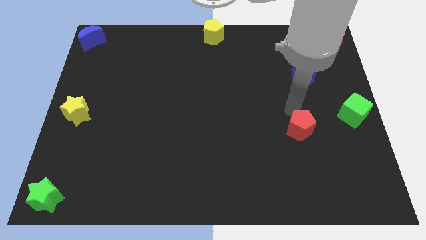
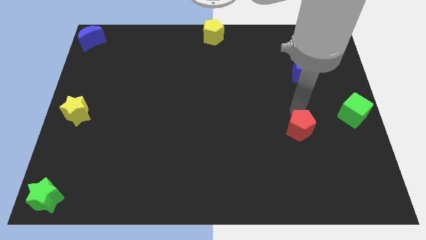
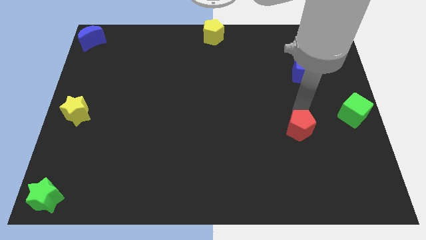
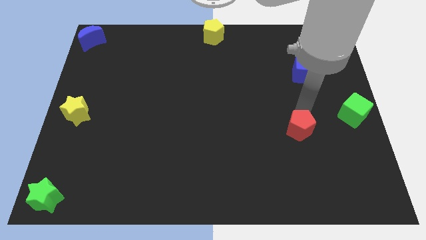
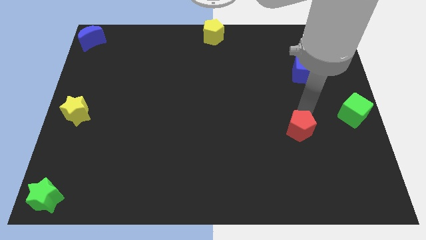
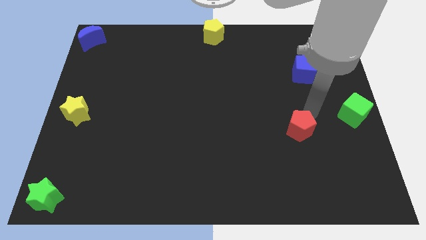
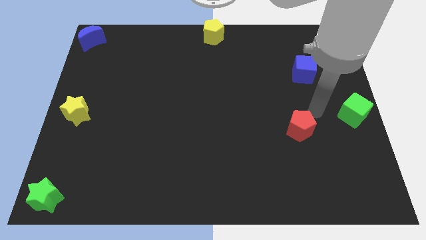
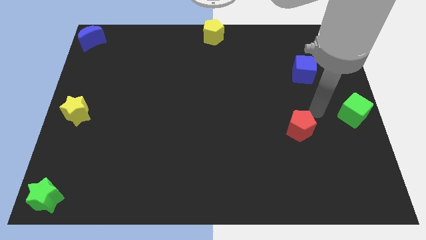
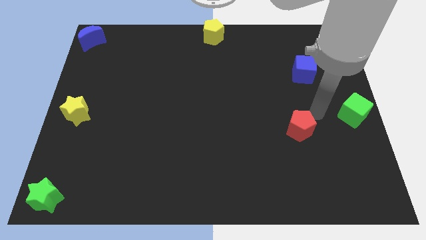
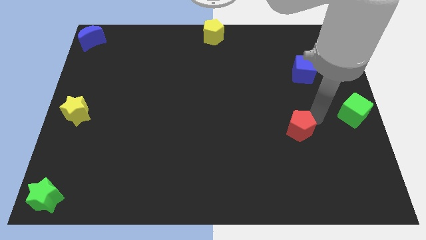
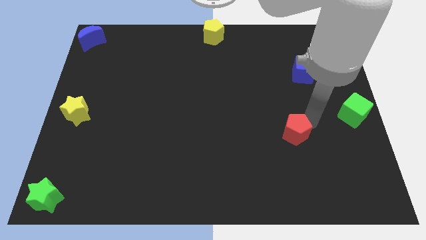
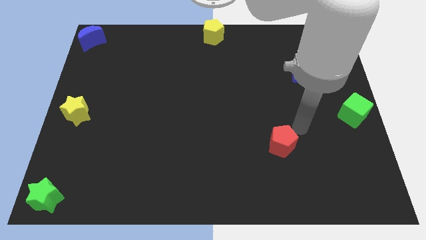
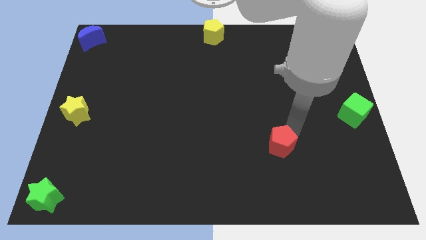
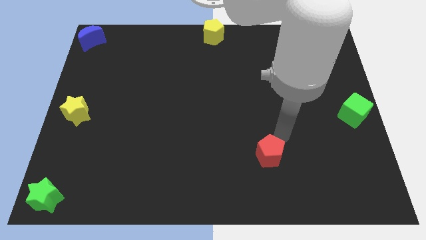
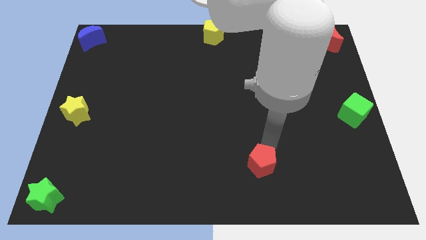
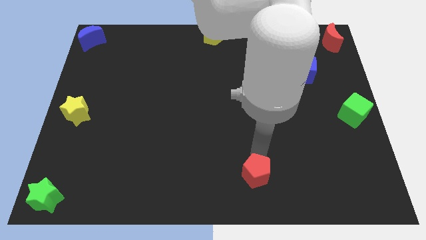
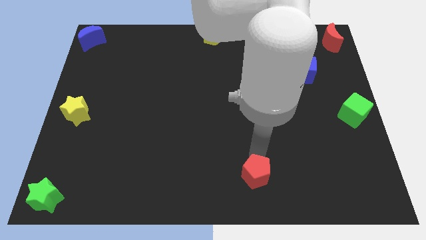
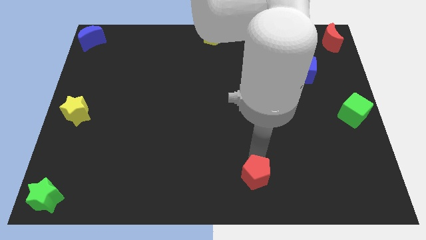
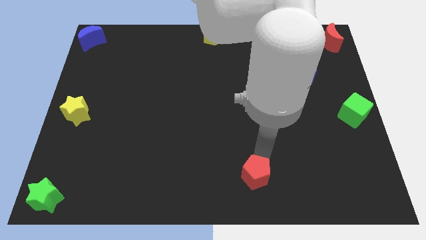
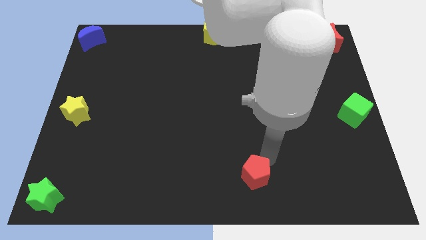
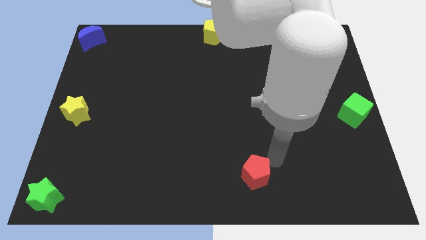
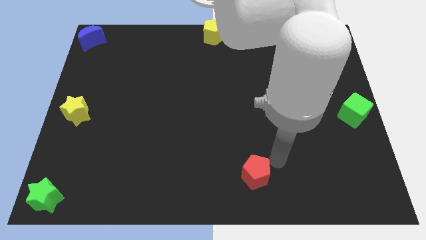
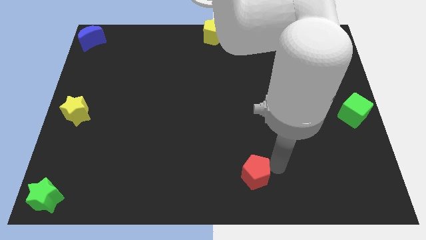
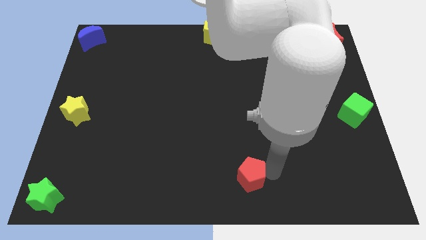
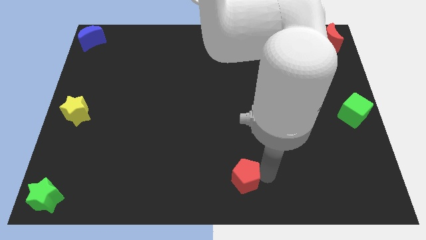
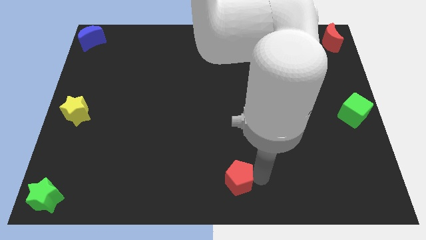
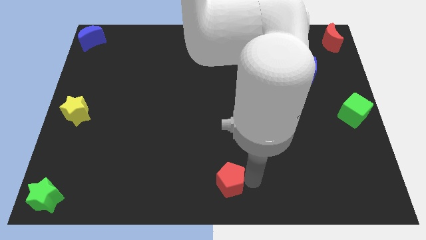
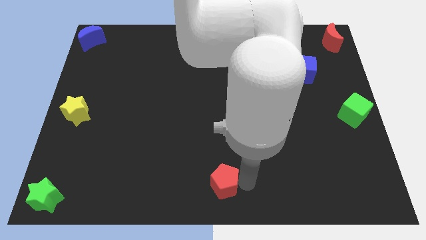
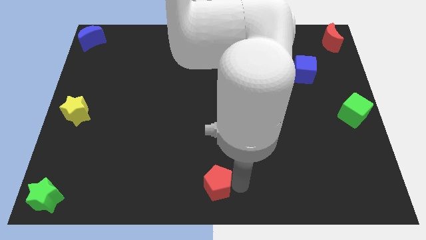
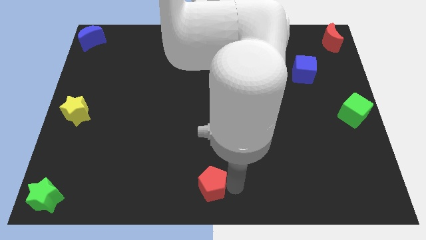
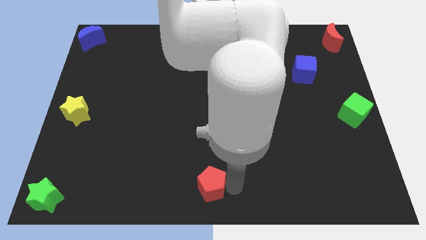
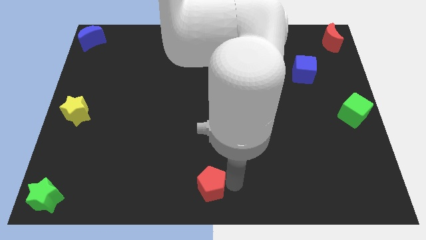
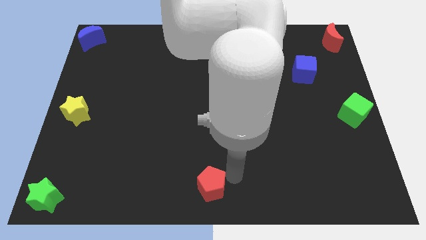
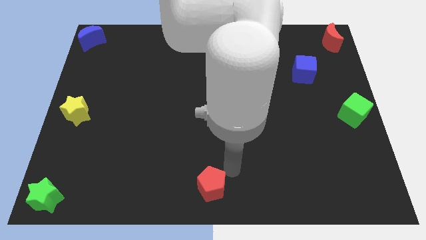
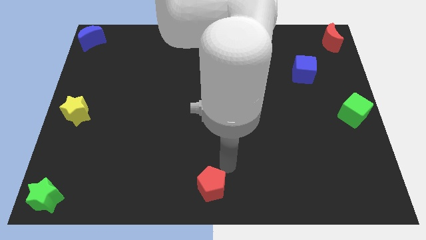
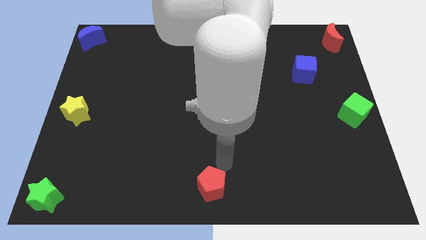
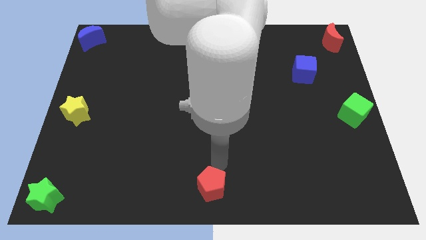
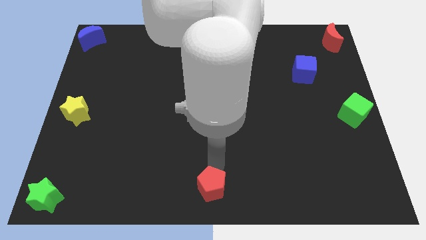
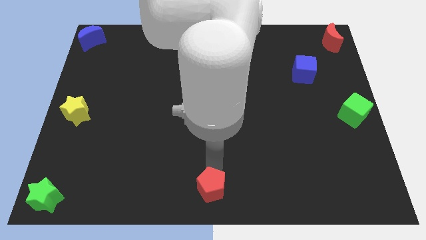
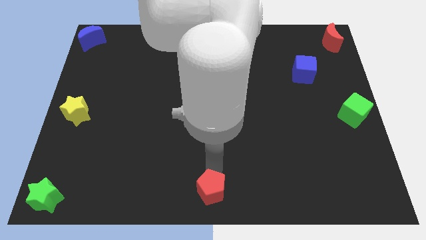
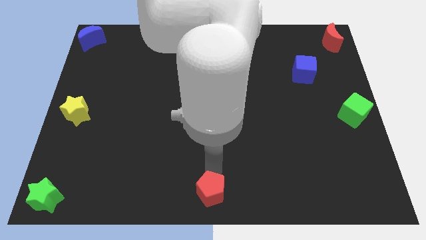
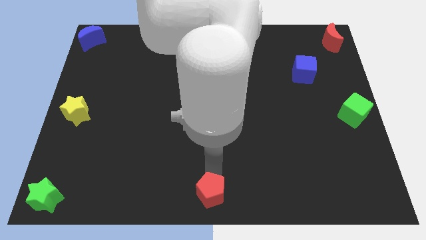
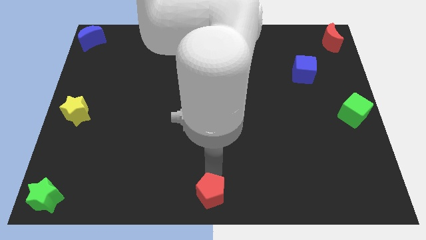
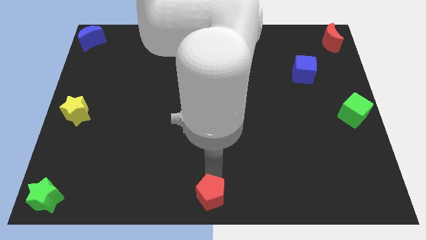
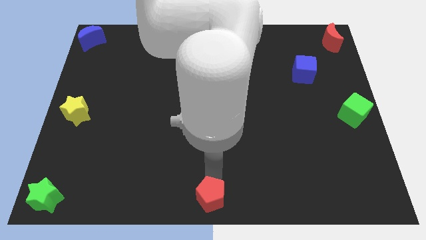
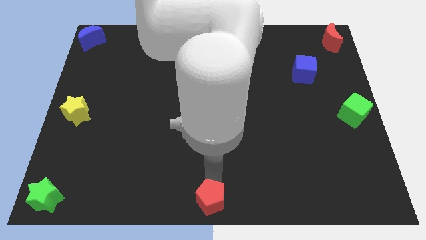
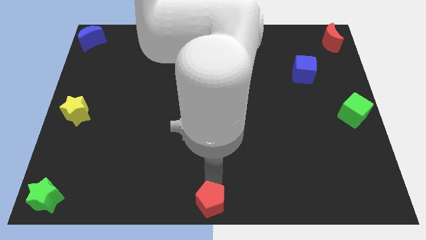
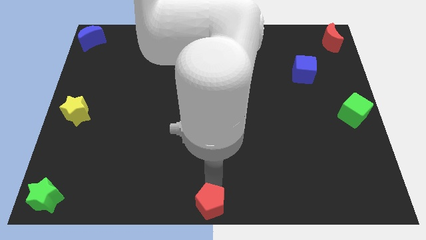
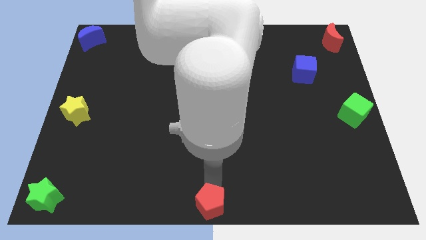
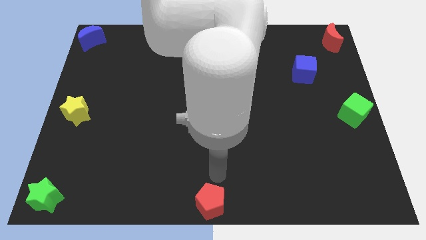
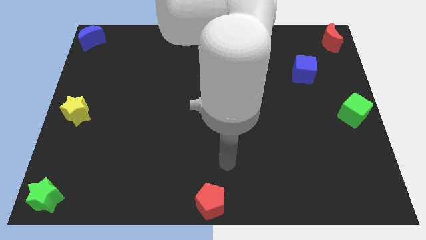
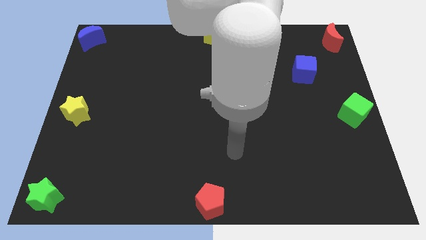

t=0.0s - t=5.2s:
place the red pentagon towards the bottom middle below the yellow pentagon

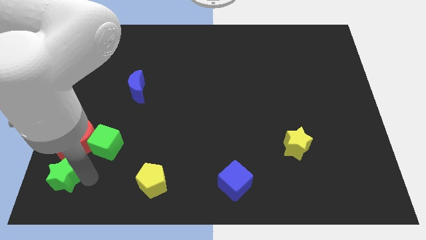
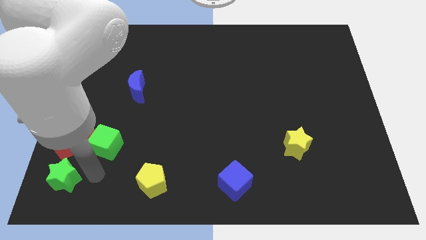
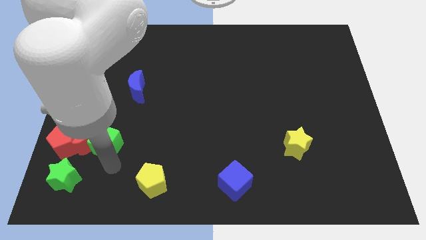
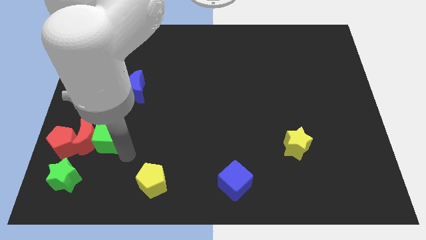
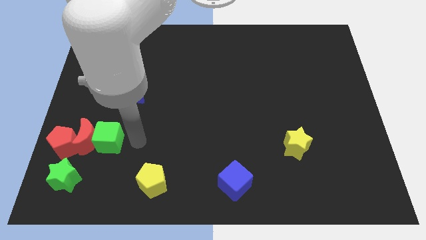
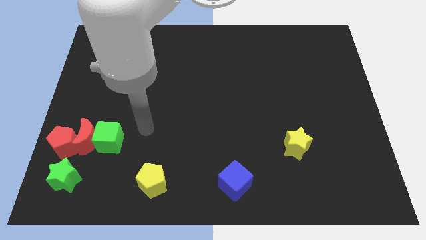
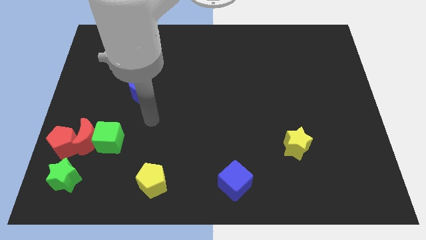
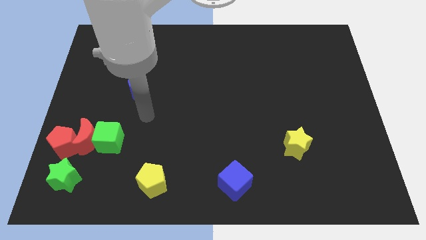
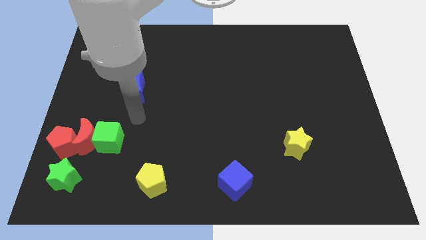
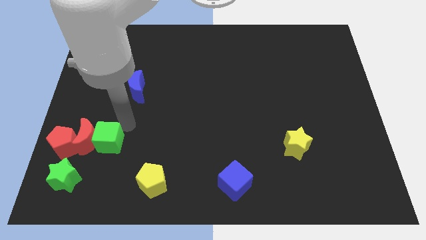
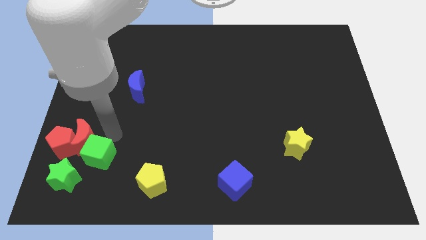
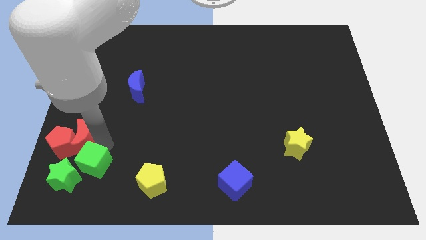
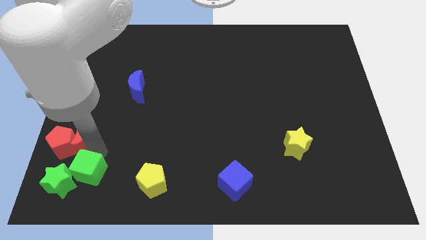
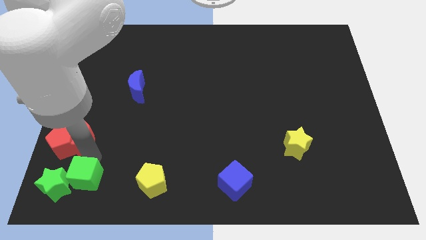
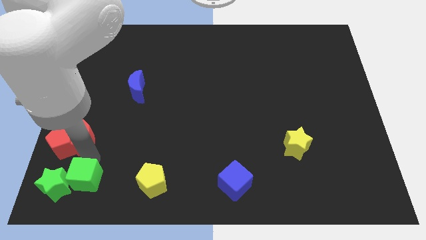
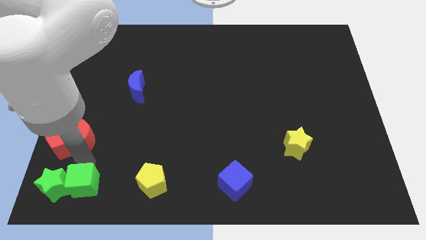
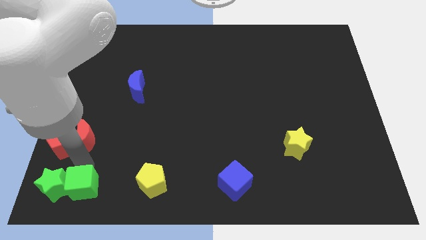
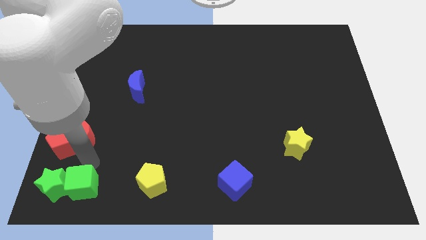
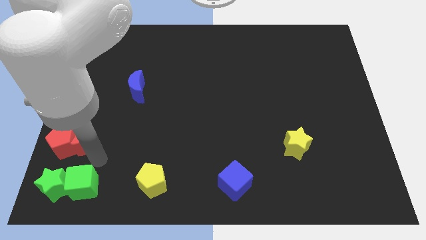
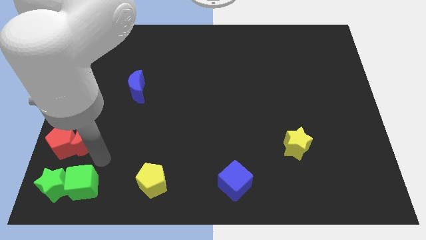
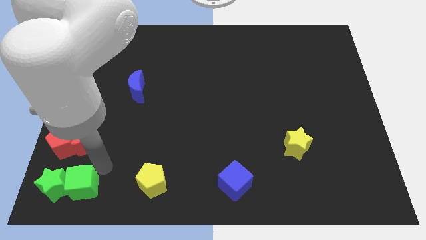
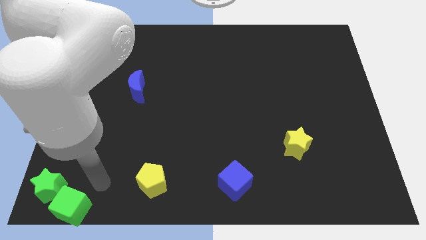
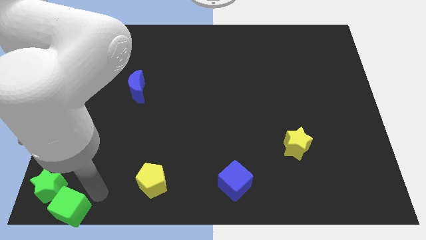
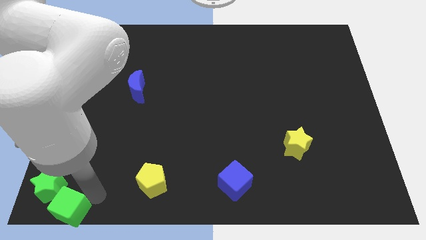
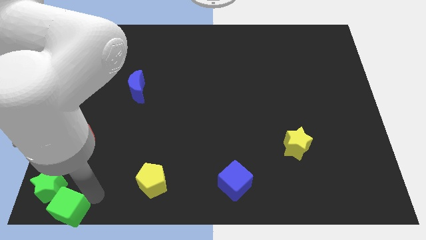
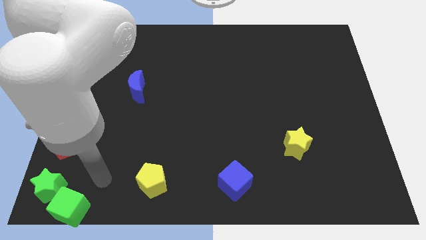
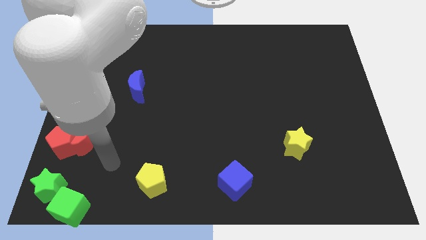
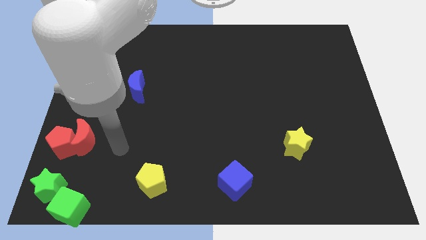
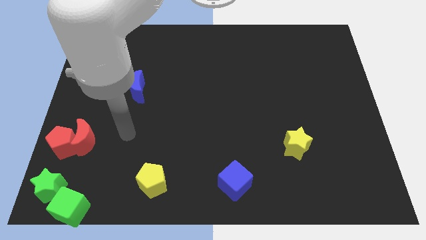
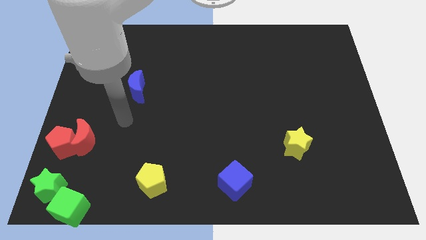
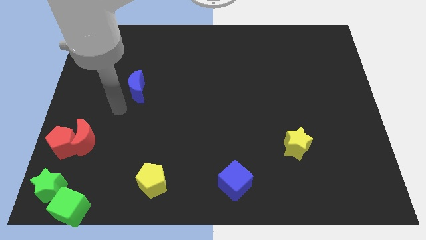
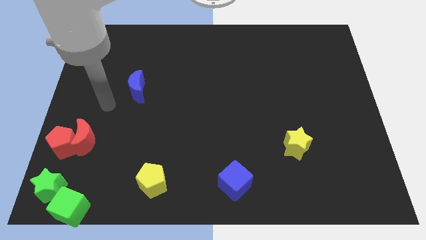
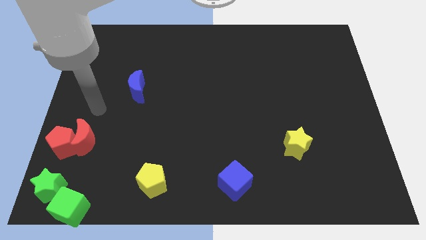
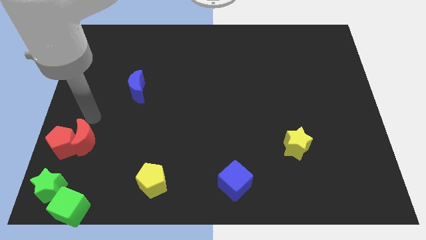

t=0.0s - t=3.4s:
place green cube to the bottom of the board

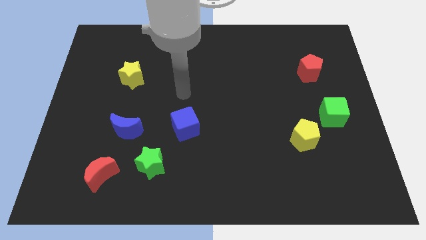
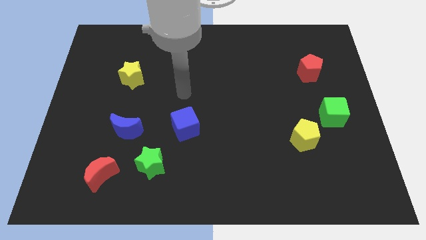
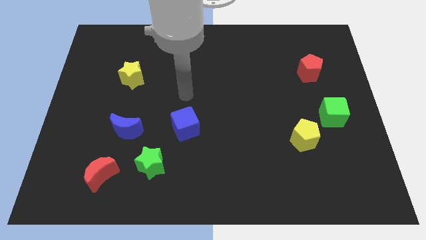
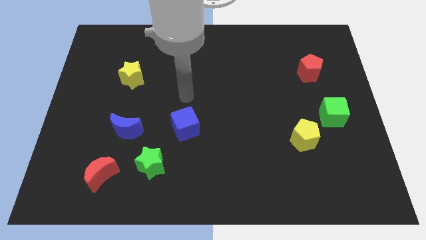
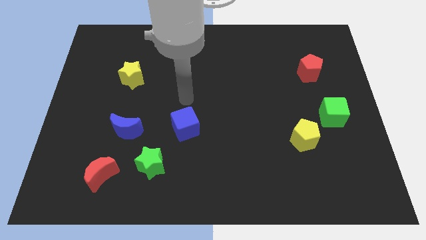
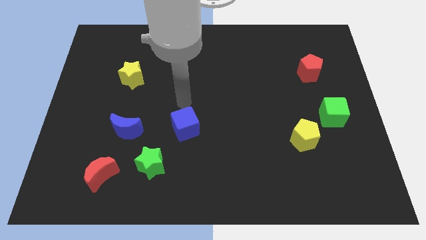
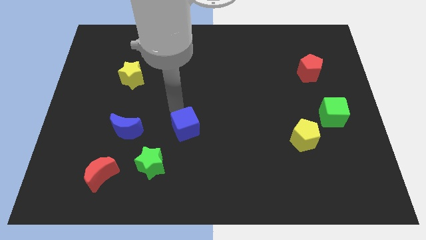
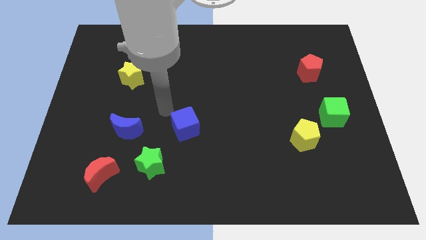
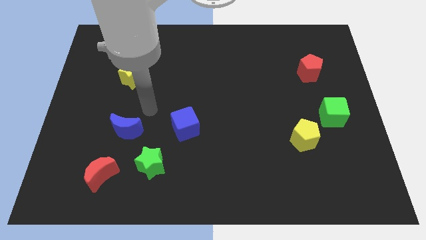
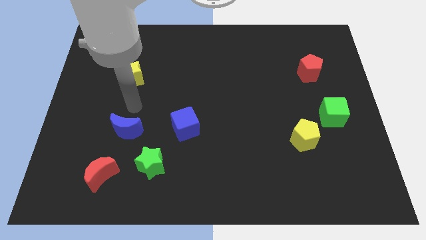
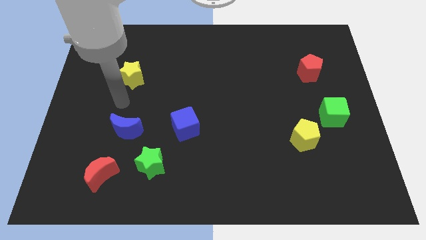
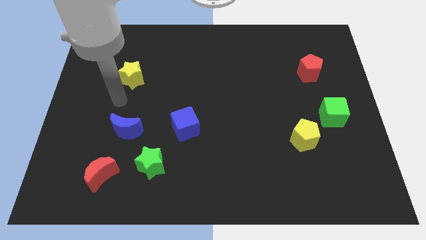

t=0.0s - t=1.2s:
move your hand towards the left
